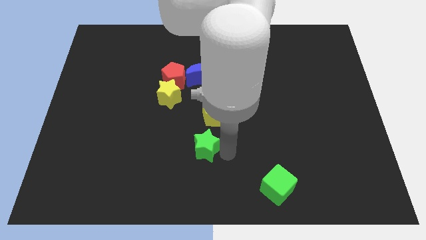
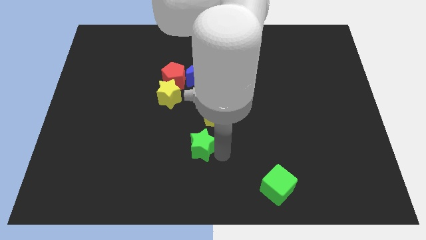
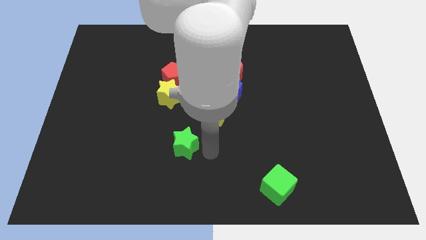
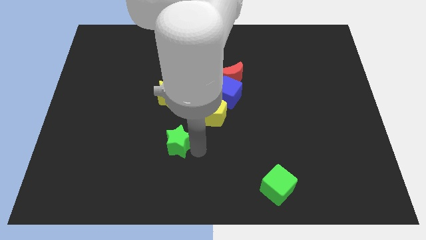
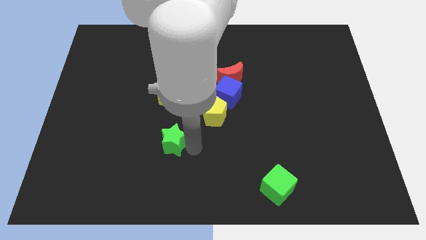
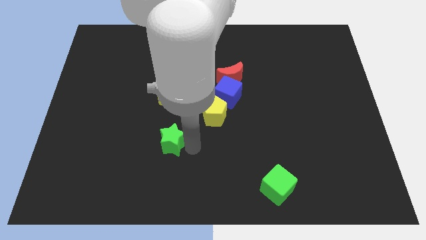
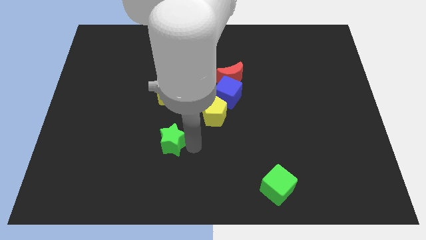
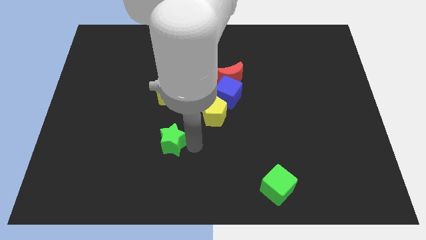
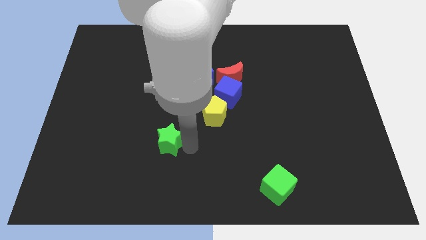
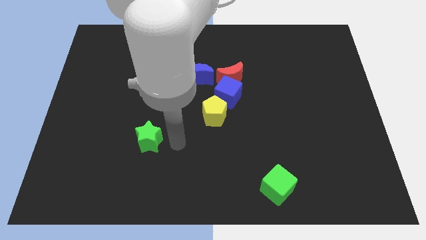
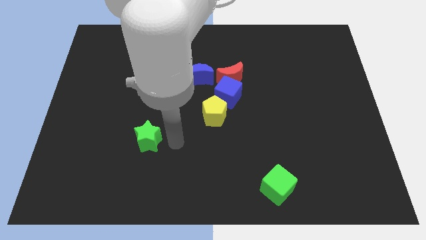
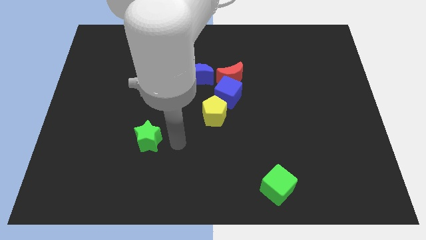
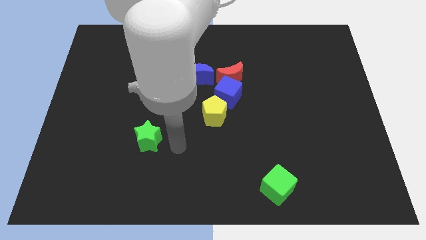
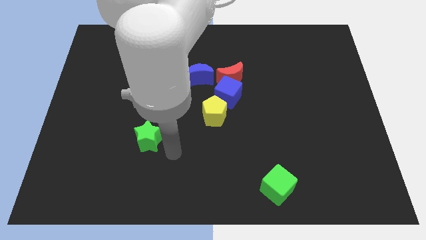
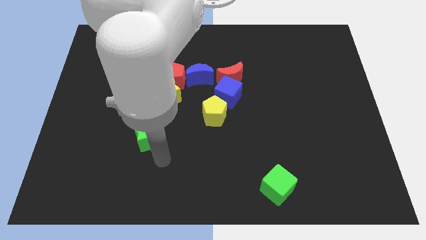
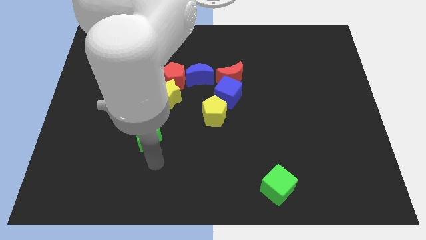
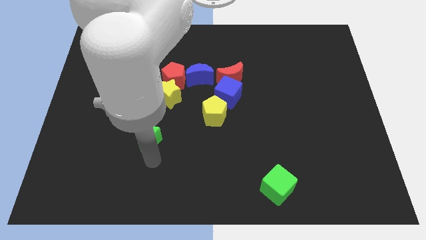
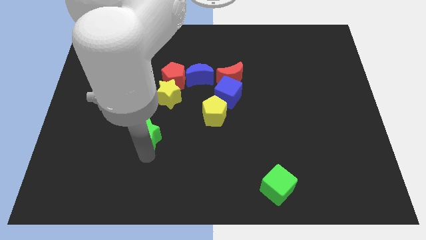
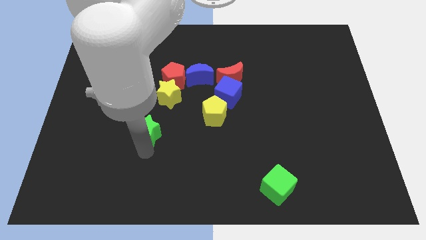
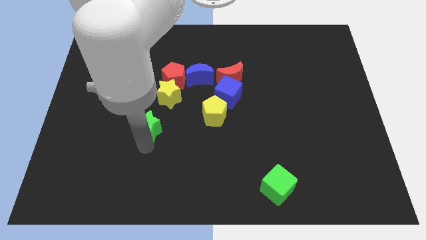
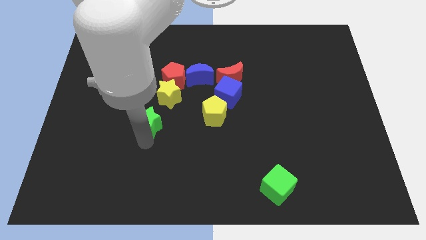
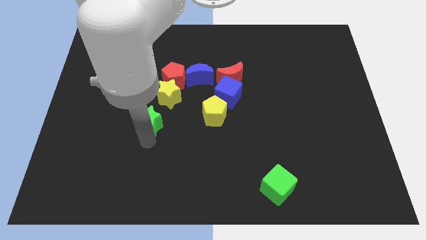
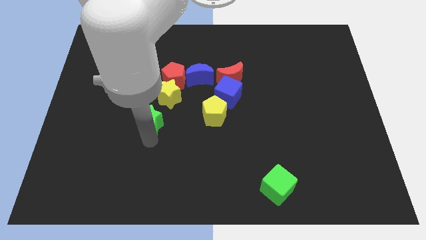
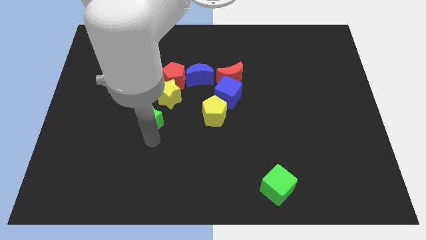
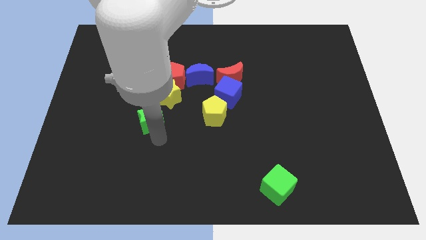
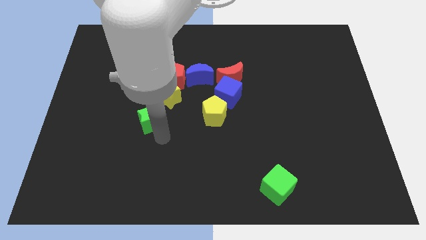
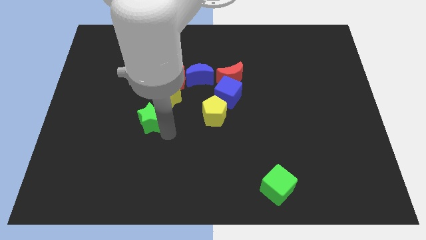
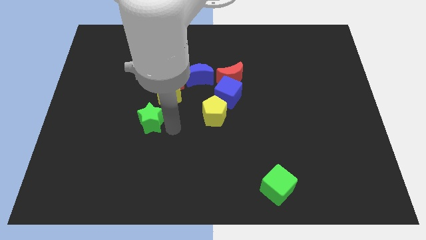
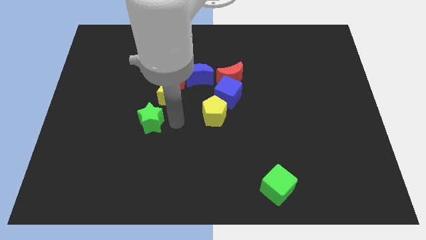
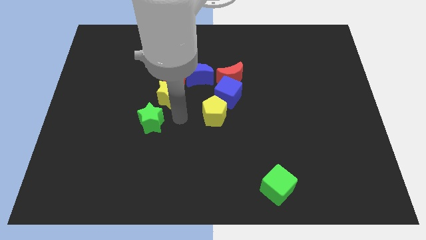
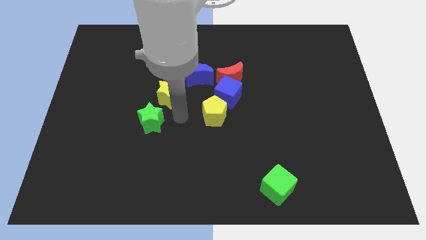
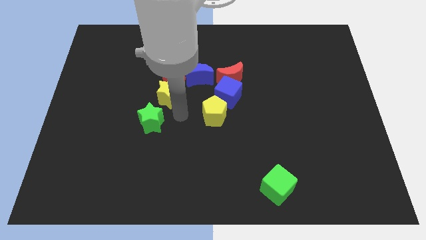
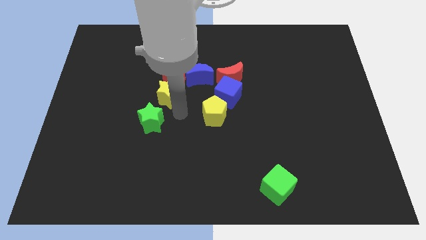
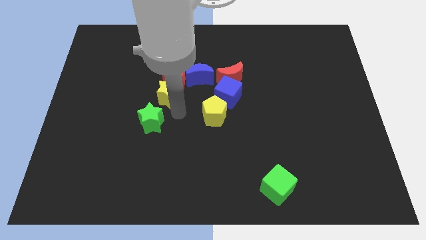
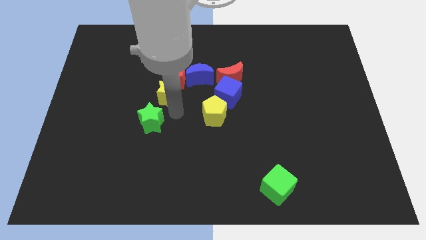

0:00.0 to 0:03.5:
move the green star to the bottom of the yellow star

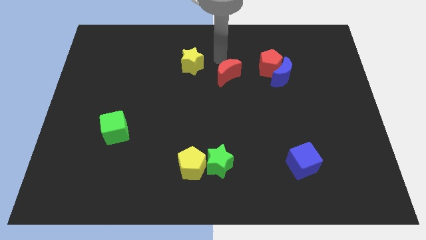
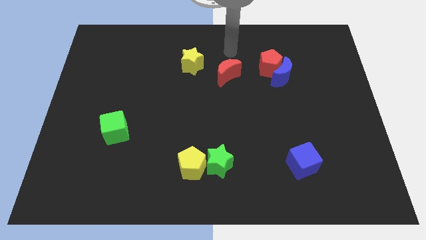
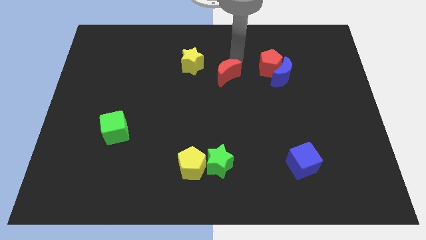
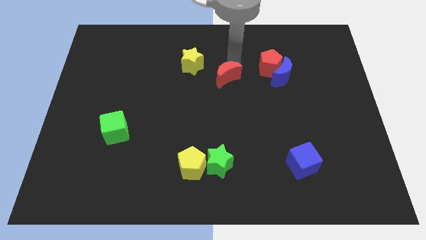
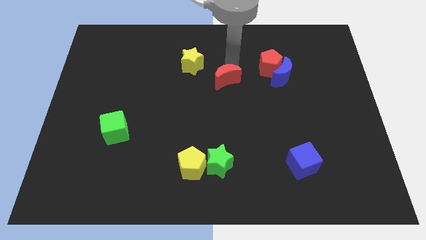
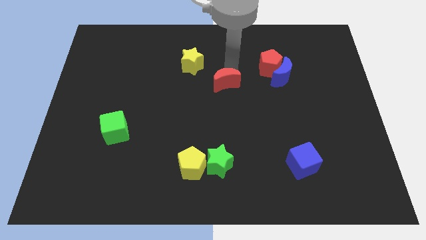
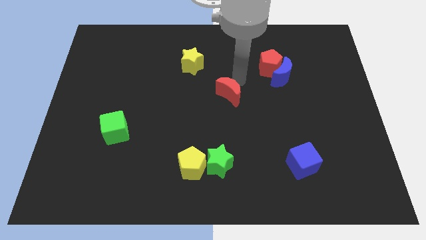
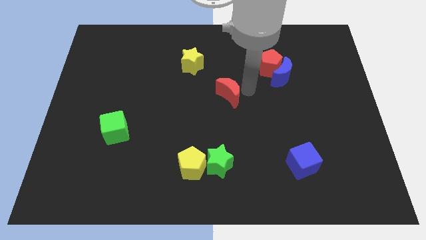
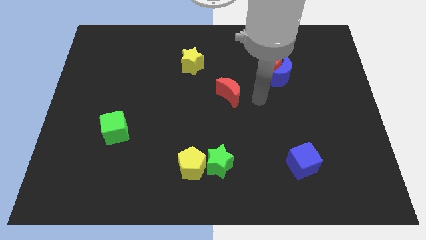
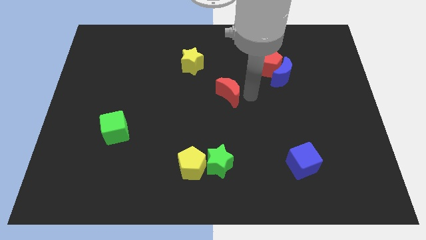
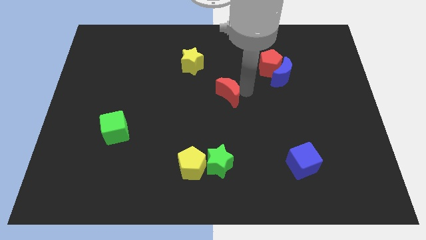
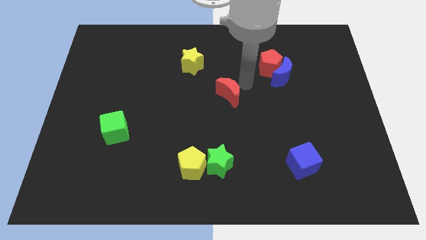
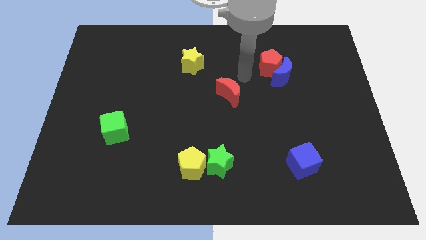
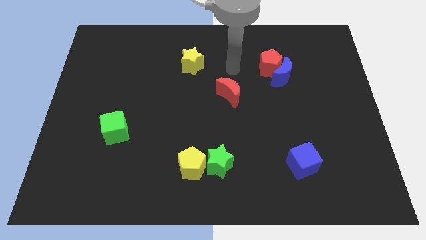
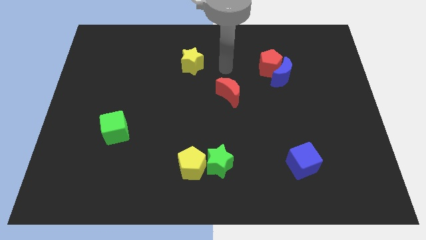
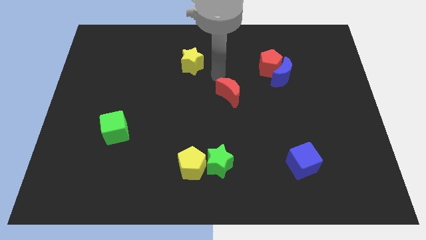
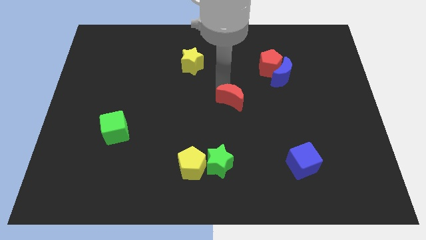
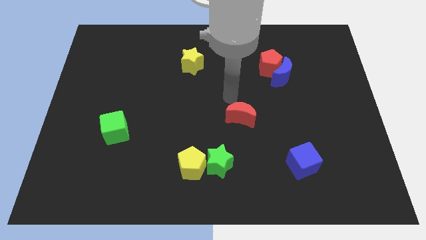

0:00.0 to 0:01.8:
put the red crescent at the center of the board

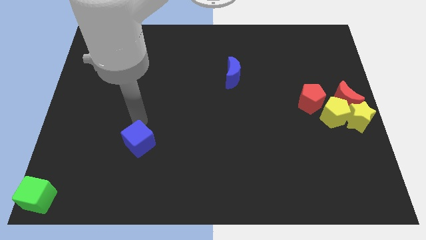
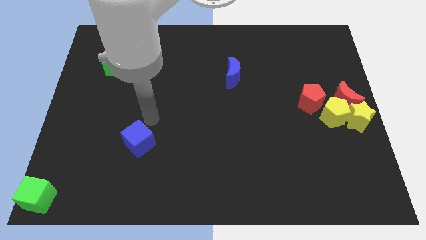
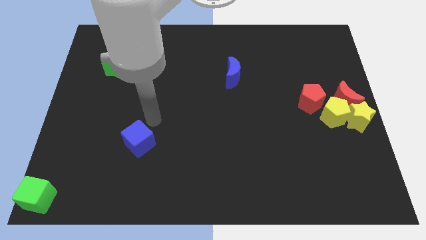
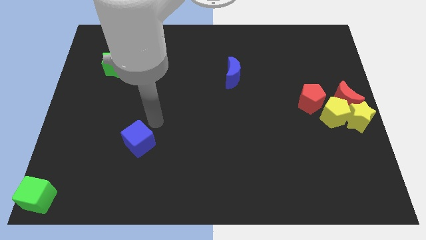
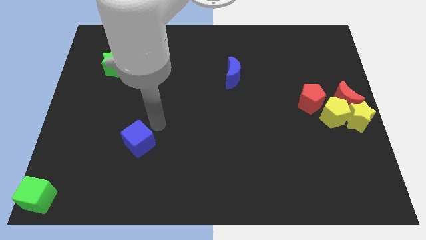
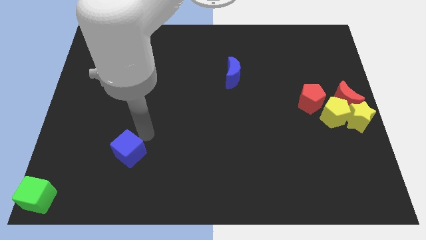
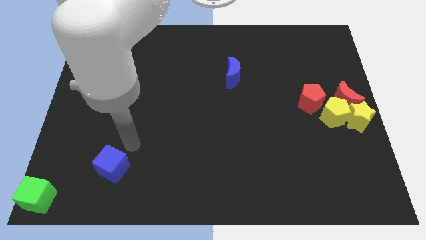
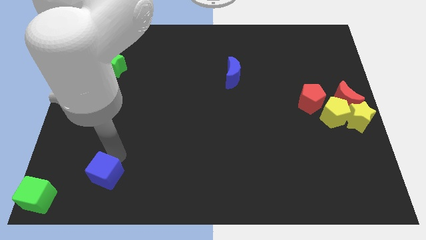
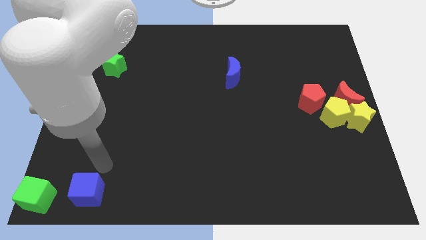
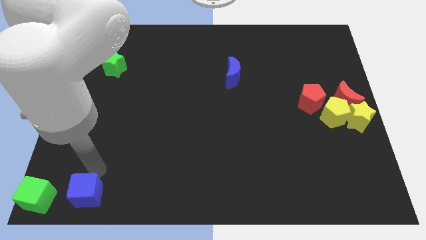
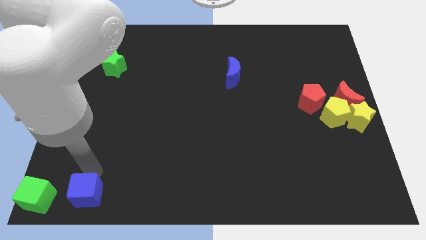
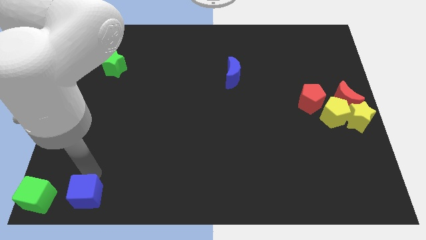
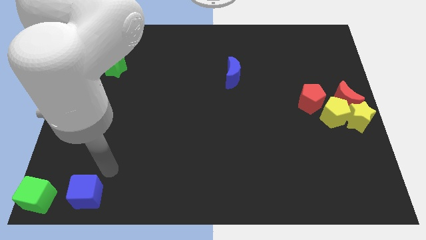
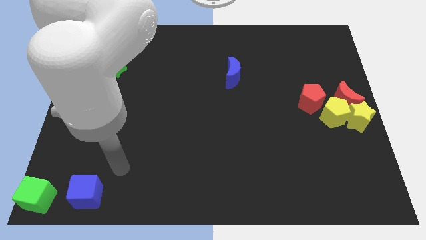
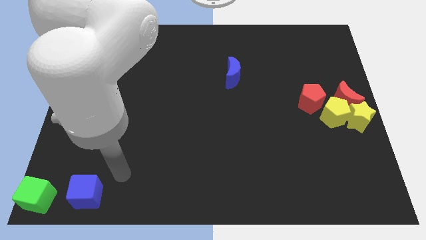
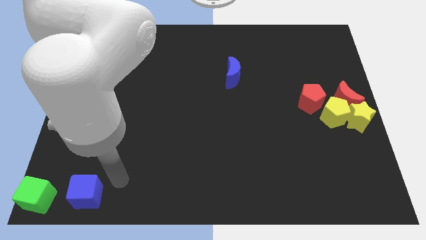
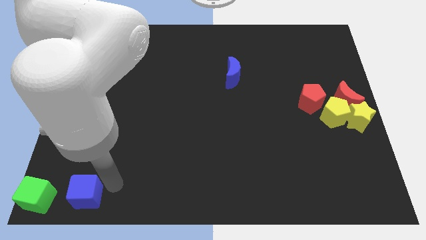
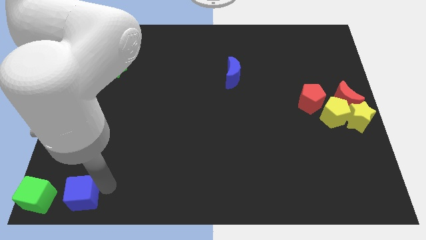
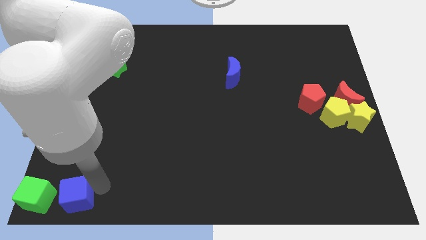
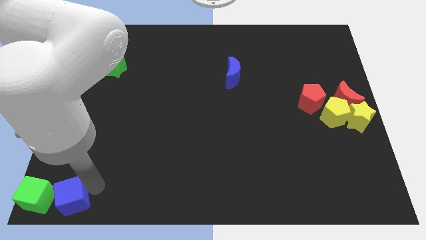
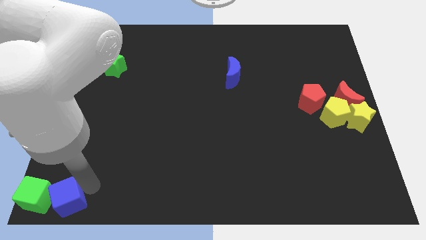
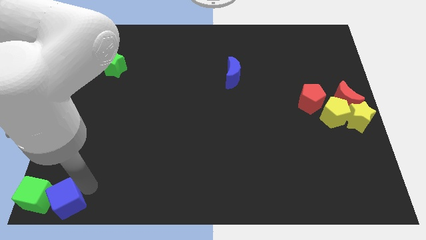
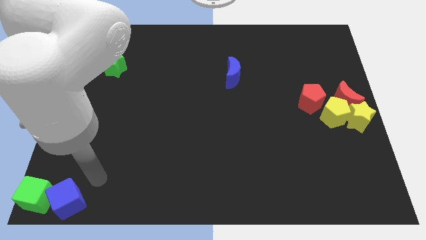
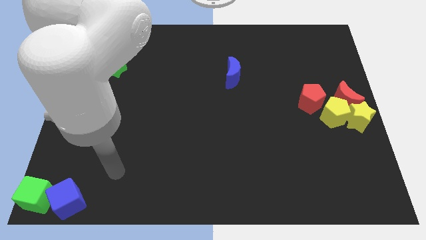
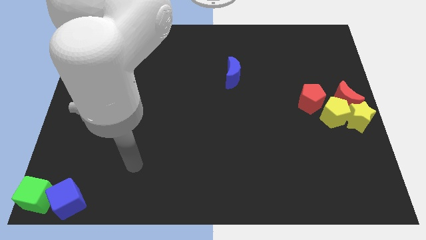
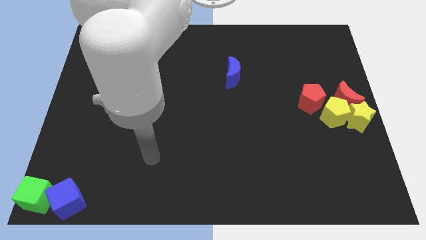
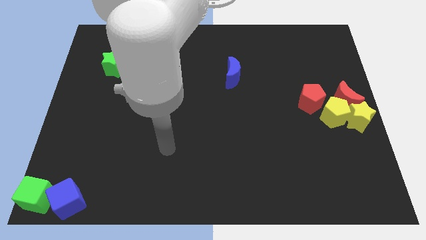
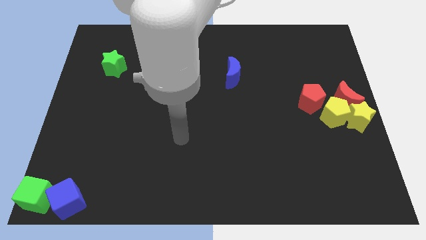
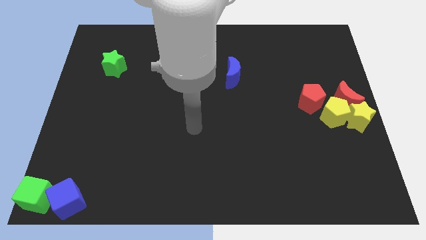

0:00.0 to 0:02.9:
push the blue cube towards the green cube

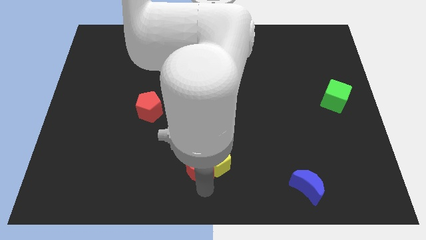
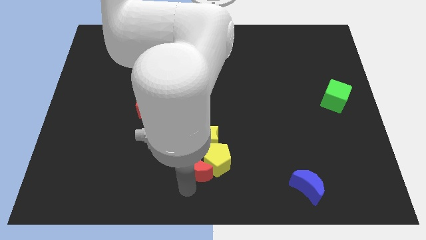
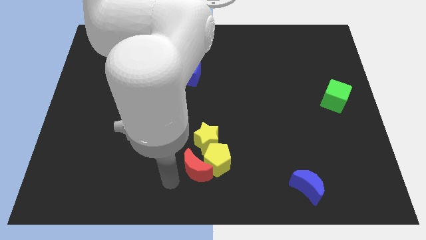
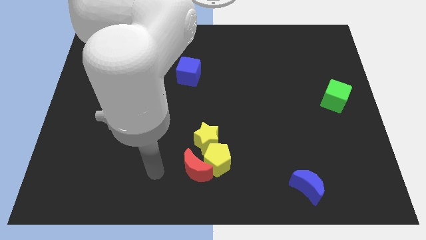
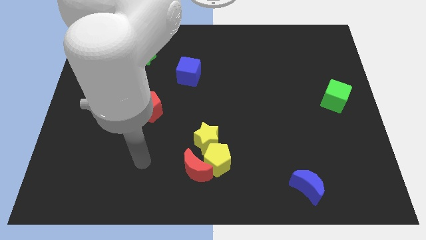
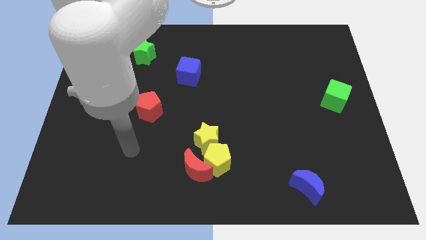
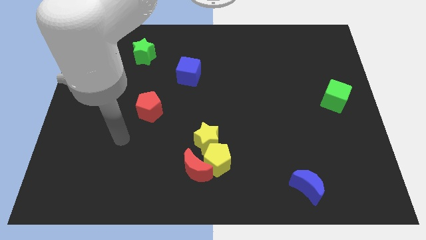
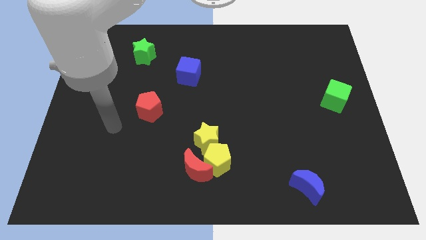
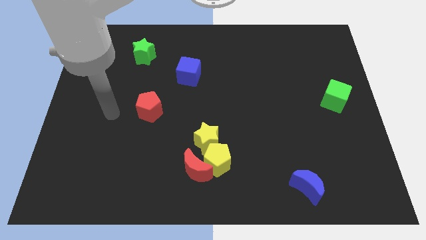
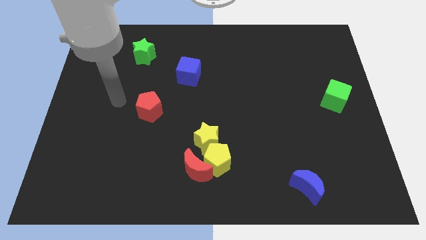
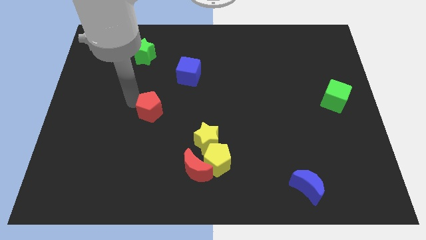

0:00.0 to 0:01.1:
move your arm to the top left of the red pentagon
